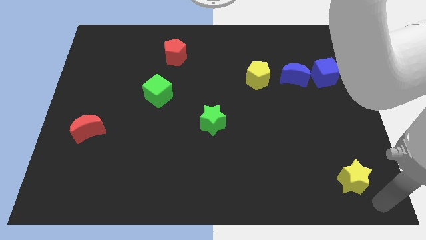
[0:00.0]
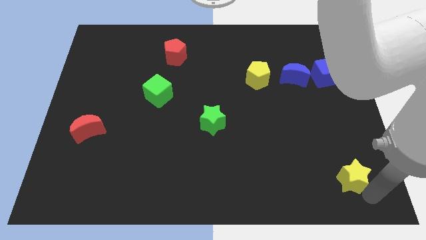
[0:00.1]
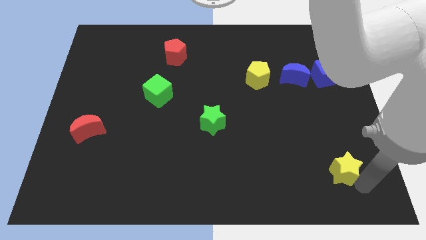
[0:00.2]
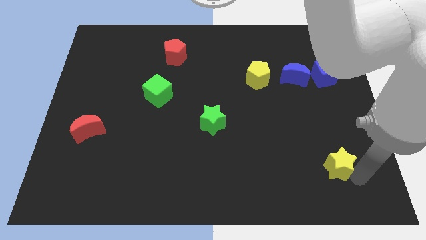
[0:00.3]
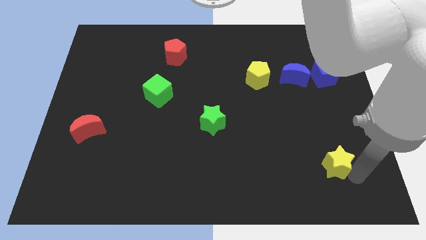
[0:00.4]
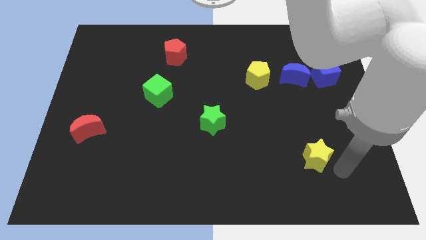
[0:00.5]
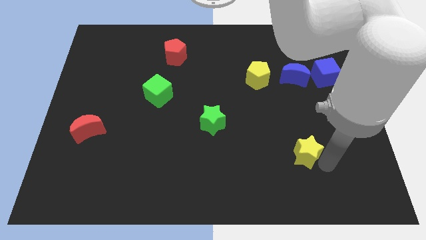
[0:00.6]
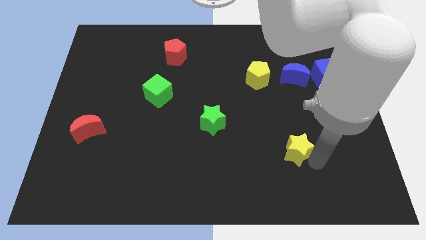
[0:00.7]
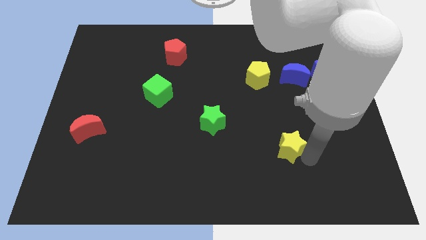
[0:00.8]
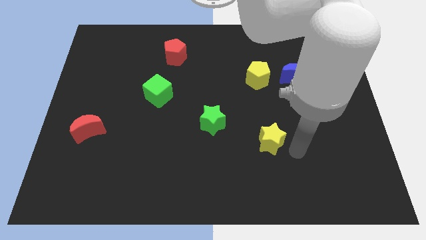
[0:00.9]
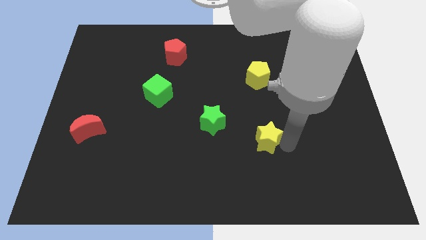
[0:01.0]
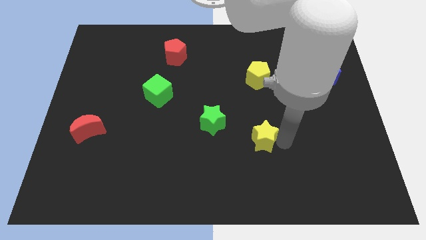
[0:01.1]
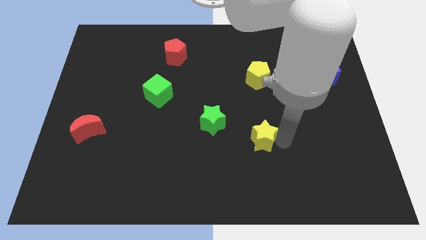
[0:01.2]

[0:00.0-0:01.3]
push the yellow star to the bottom of the yellow pentagon

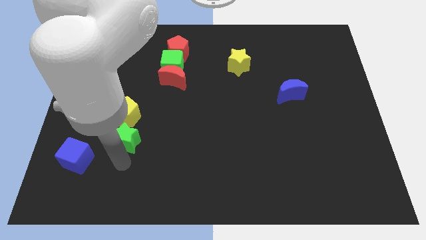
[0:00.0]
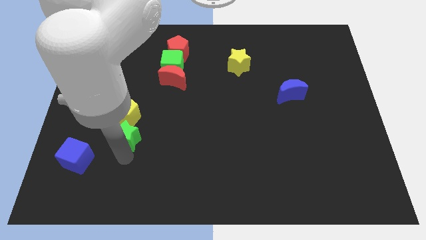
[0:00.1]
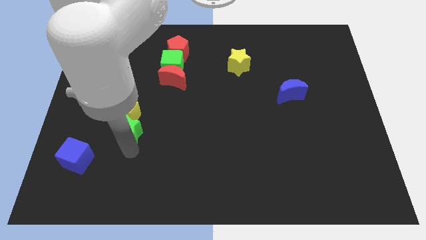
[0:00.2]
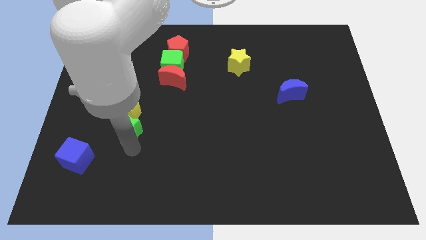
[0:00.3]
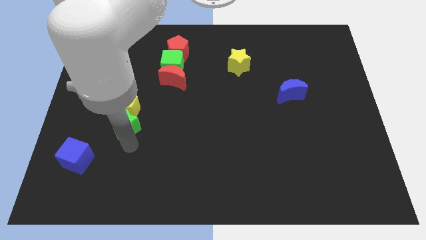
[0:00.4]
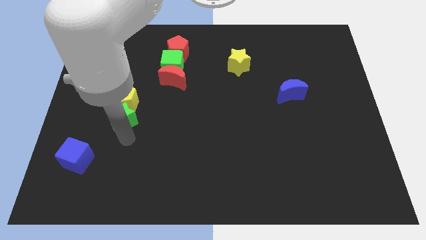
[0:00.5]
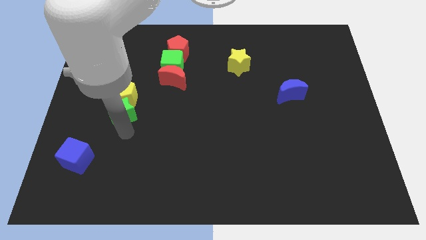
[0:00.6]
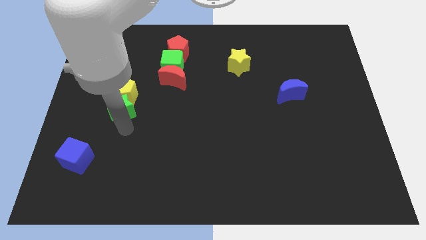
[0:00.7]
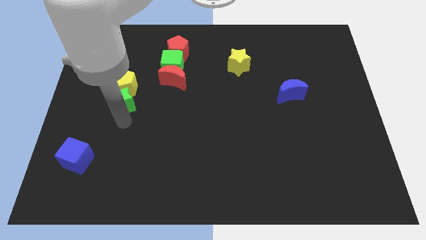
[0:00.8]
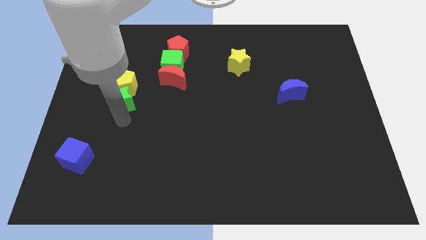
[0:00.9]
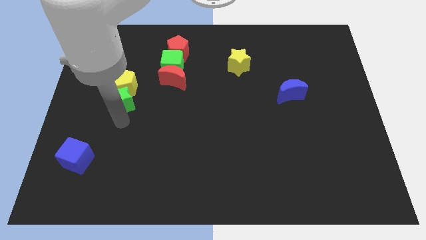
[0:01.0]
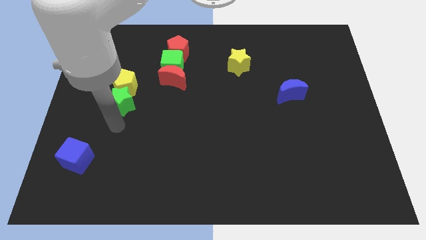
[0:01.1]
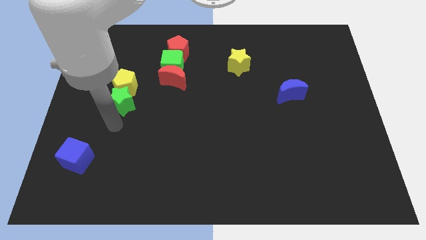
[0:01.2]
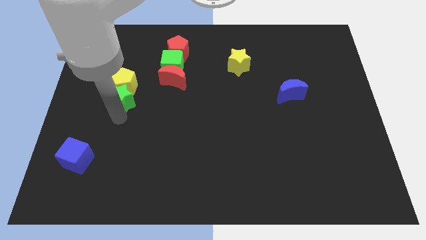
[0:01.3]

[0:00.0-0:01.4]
push the green star and yellow pentagon towards the top left

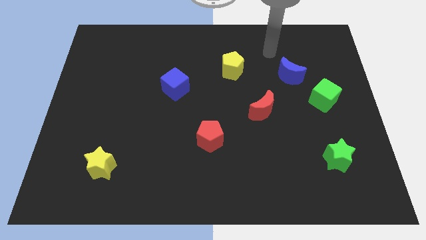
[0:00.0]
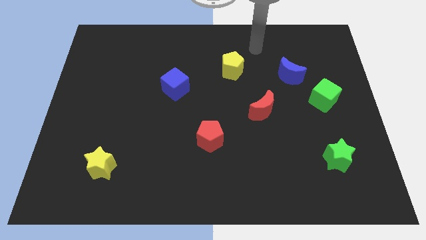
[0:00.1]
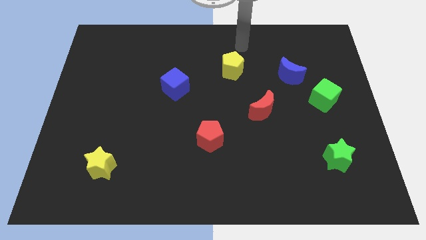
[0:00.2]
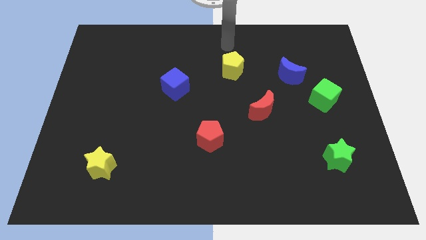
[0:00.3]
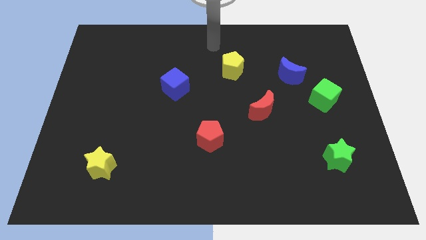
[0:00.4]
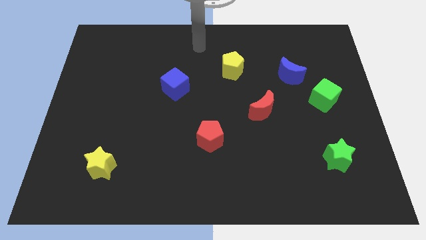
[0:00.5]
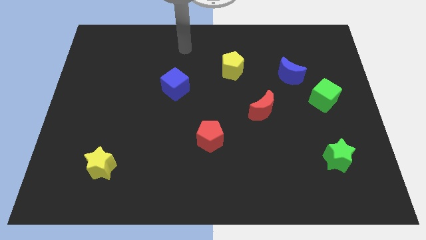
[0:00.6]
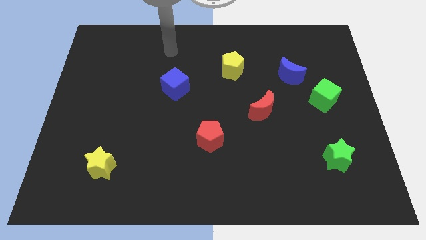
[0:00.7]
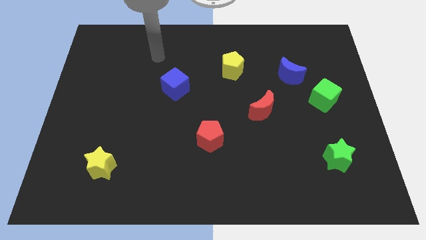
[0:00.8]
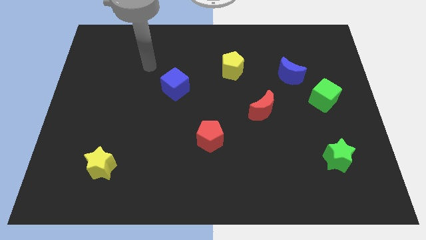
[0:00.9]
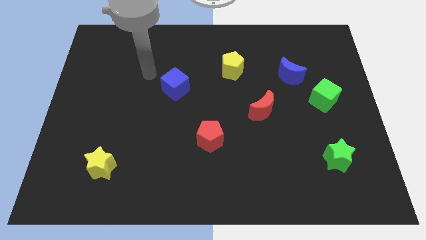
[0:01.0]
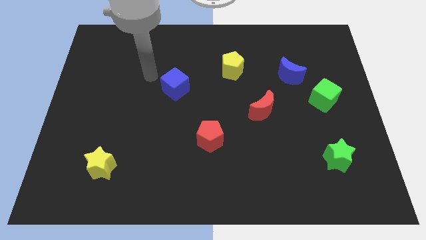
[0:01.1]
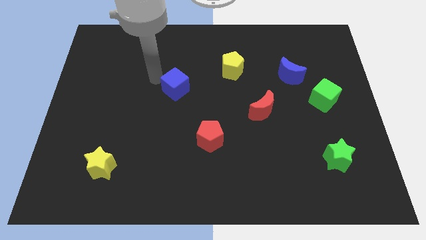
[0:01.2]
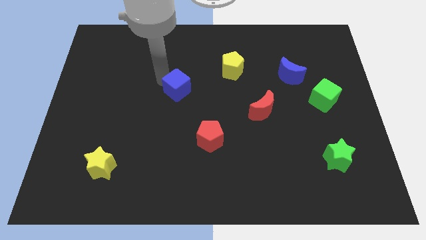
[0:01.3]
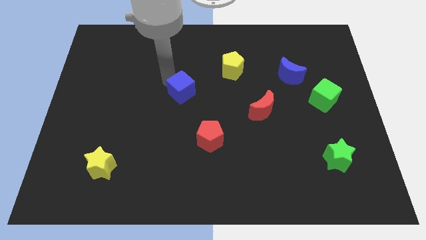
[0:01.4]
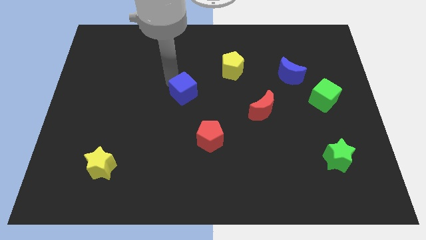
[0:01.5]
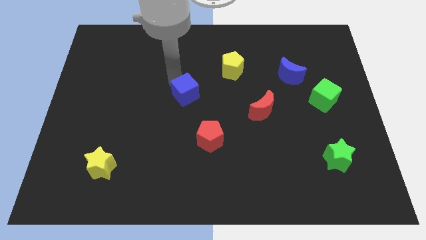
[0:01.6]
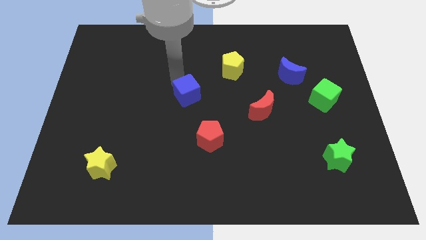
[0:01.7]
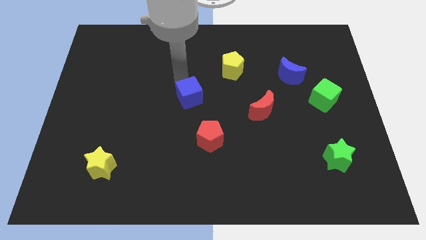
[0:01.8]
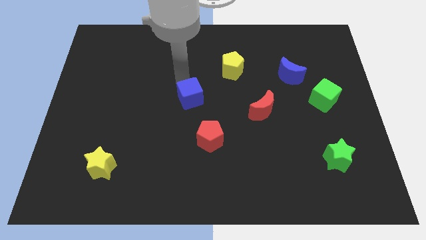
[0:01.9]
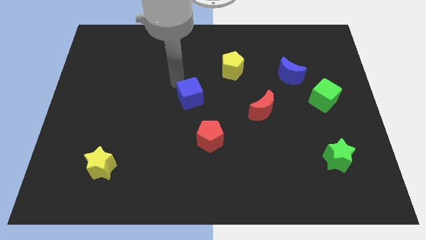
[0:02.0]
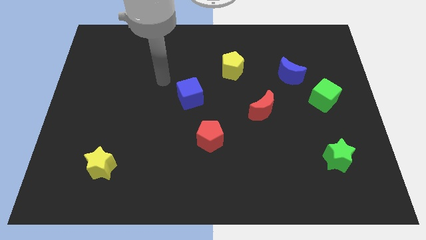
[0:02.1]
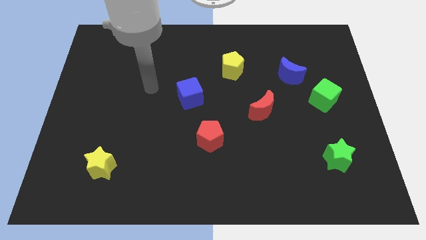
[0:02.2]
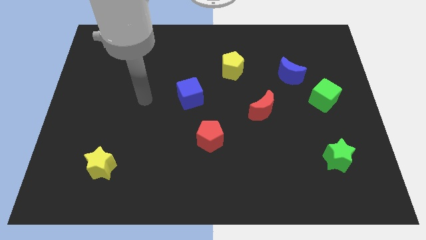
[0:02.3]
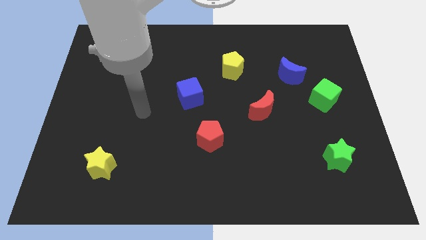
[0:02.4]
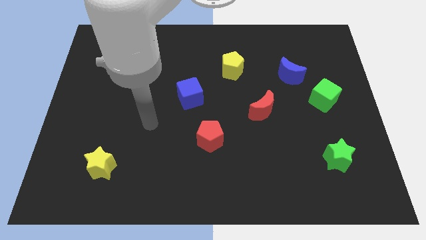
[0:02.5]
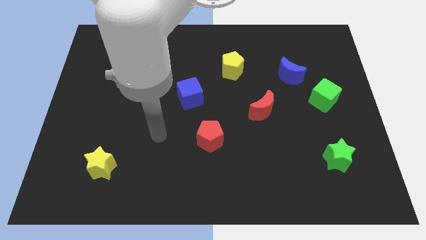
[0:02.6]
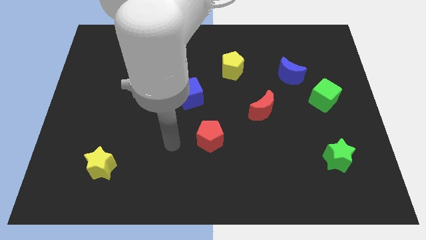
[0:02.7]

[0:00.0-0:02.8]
push the blue cube towards the center of the board

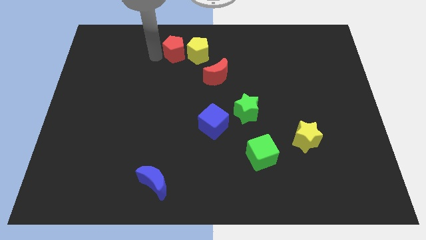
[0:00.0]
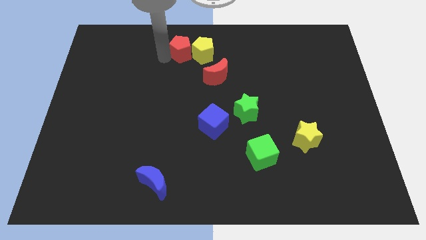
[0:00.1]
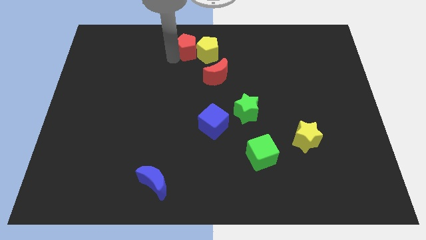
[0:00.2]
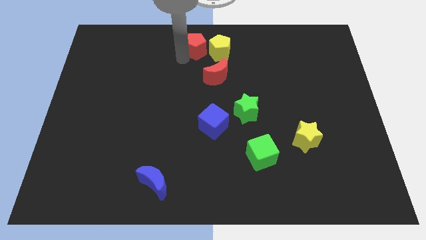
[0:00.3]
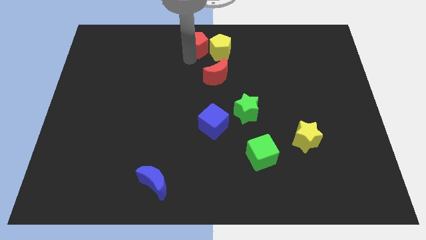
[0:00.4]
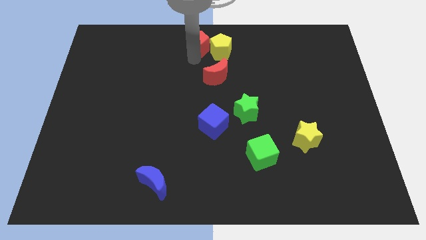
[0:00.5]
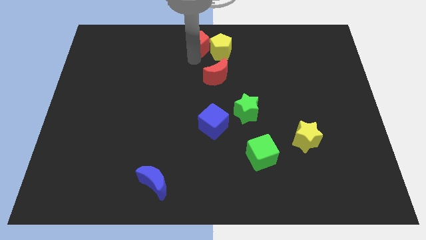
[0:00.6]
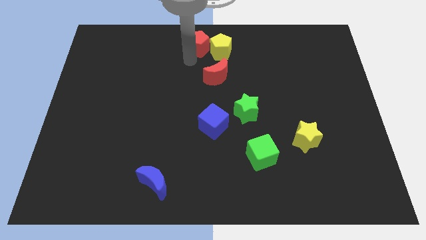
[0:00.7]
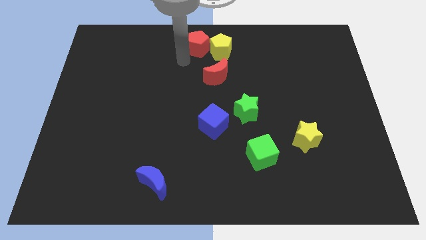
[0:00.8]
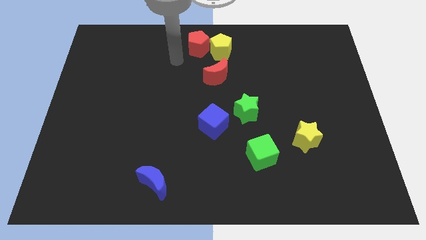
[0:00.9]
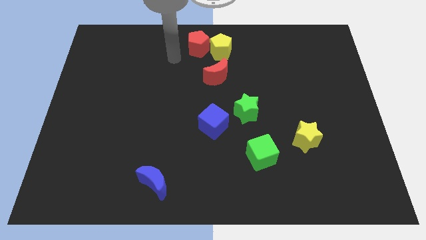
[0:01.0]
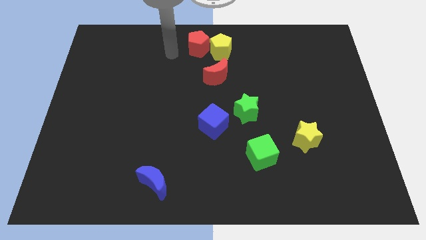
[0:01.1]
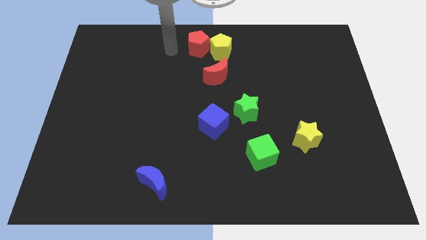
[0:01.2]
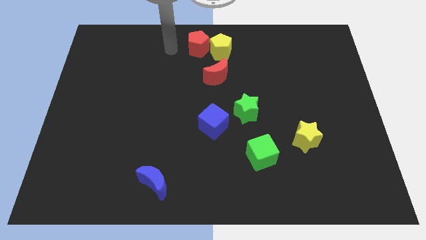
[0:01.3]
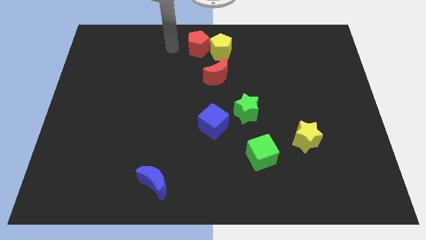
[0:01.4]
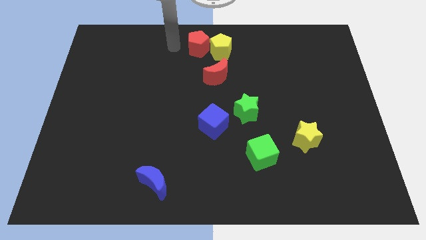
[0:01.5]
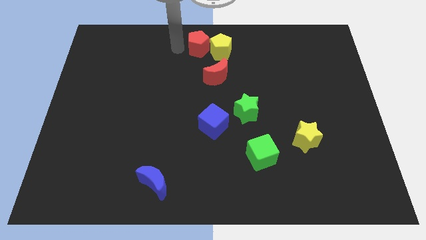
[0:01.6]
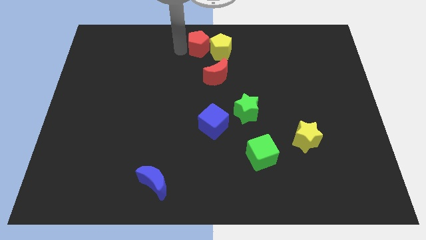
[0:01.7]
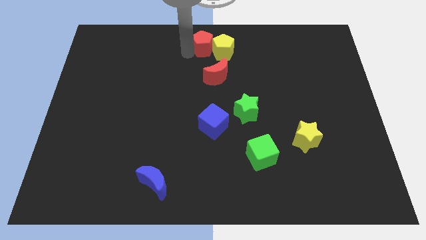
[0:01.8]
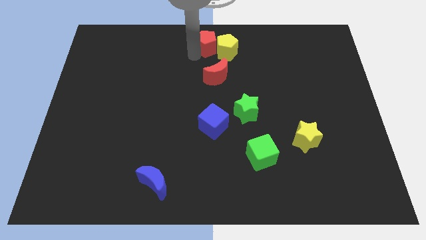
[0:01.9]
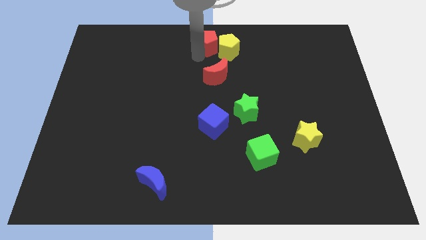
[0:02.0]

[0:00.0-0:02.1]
move the red pentagon along with yellow pentagon above the red crescent

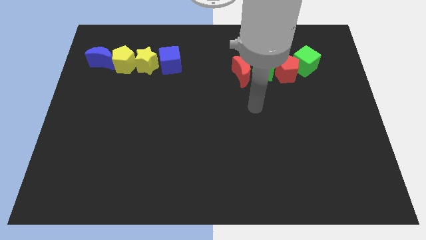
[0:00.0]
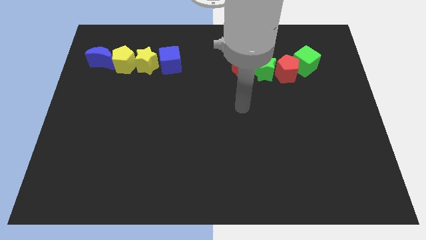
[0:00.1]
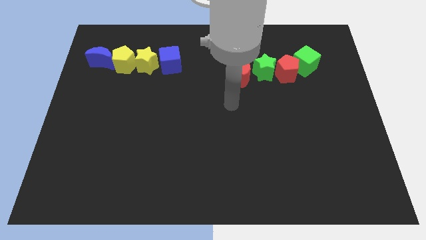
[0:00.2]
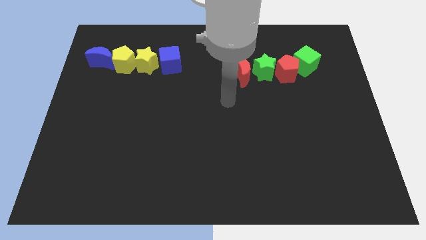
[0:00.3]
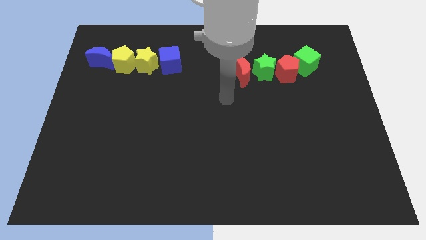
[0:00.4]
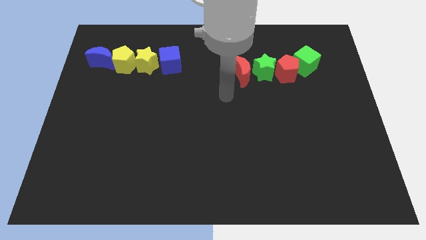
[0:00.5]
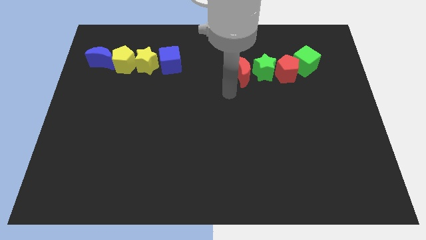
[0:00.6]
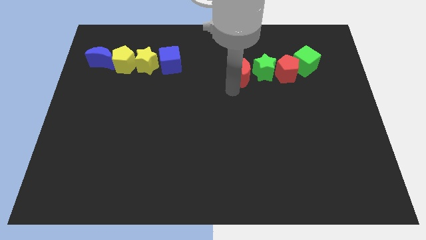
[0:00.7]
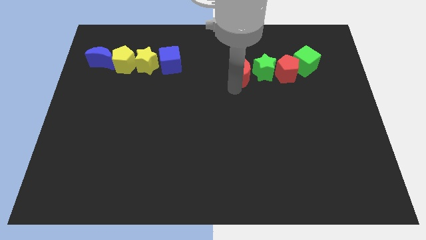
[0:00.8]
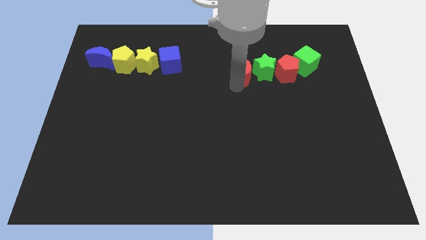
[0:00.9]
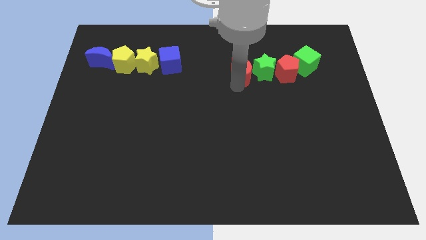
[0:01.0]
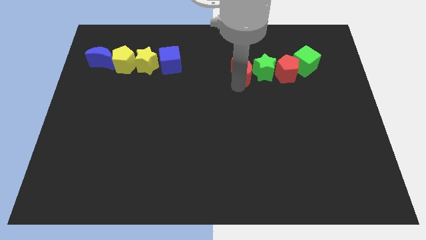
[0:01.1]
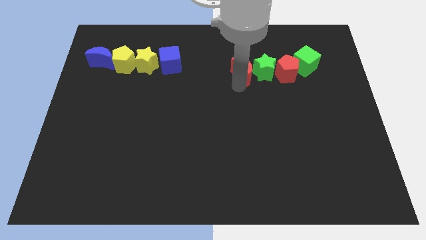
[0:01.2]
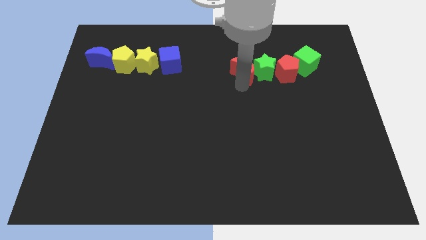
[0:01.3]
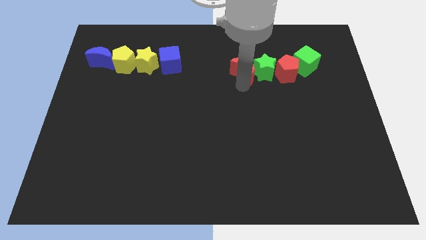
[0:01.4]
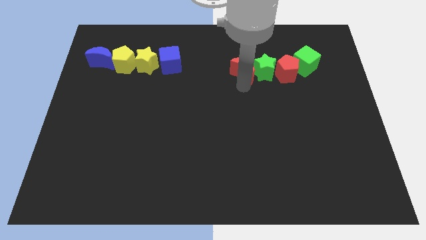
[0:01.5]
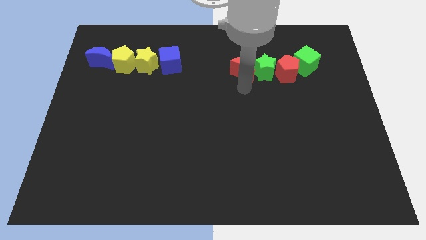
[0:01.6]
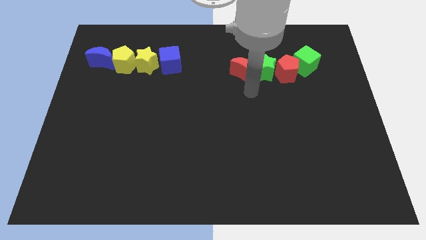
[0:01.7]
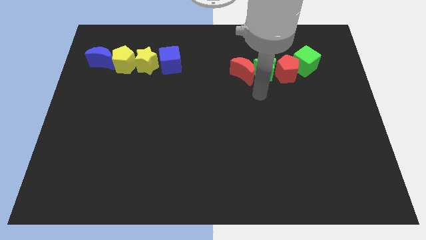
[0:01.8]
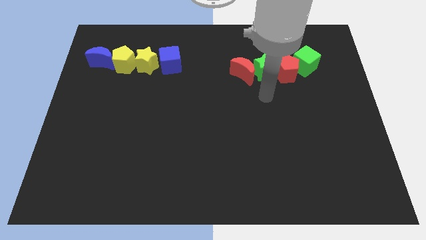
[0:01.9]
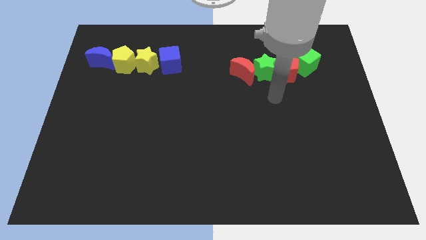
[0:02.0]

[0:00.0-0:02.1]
slightly move the red crescent to its right
